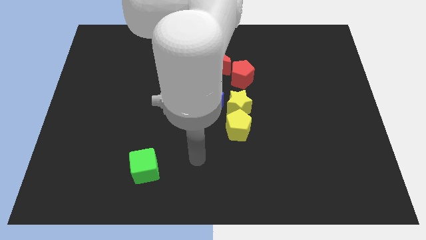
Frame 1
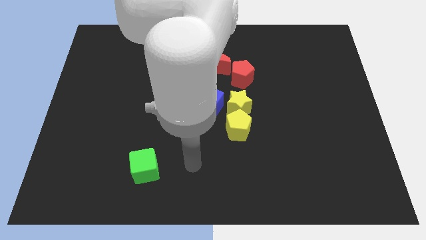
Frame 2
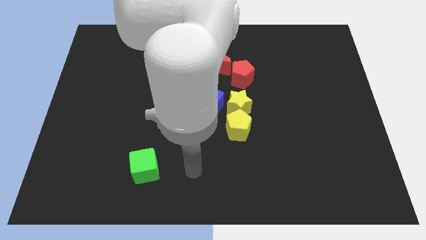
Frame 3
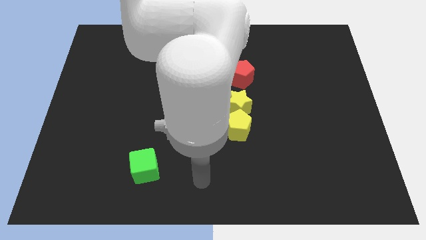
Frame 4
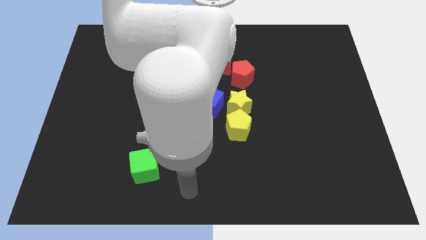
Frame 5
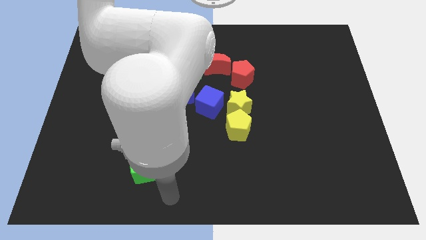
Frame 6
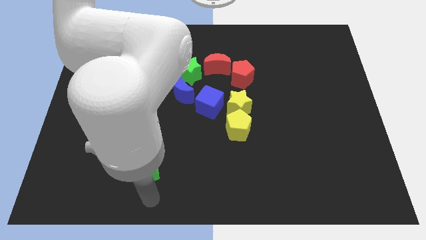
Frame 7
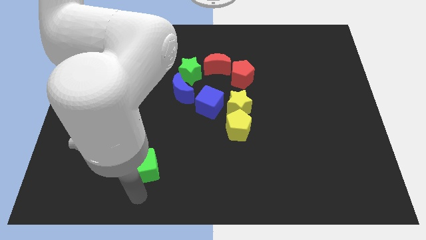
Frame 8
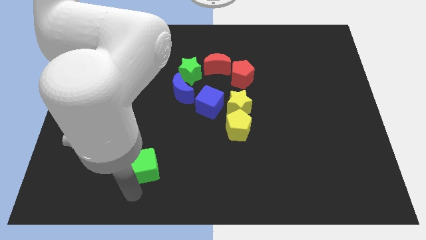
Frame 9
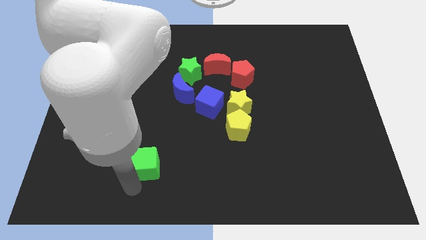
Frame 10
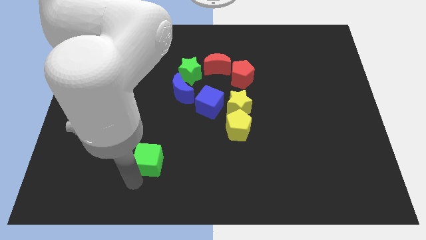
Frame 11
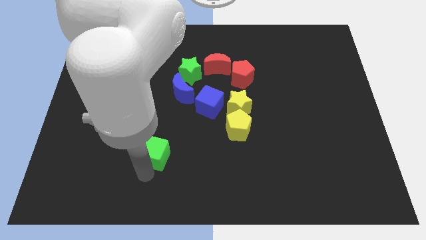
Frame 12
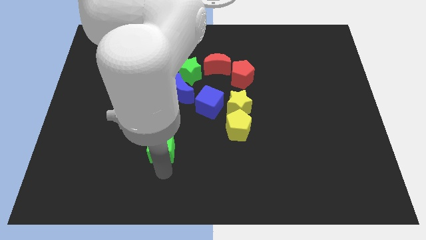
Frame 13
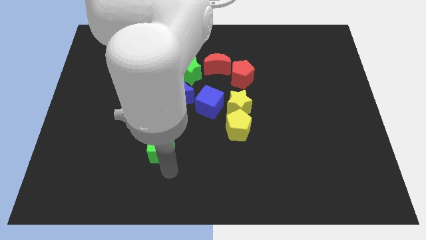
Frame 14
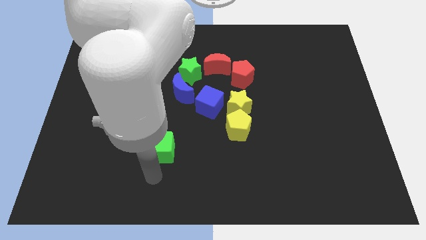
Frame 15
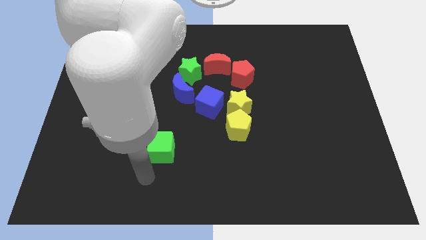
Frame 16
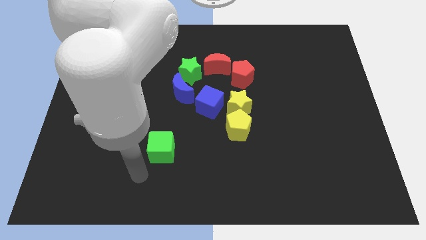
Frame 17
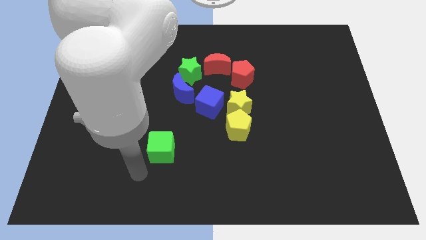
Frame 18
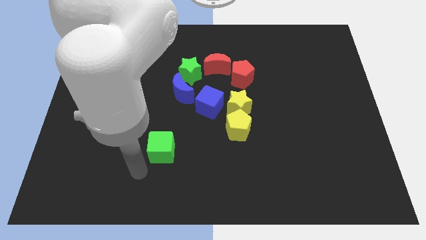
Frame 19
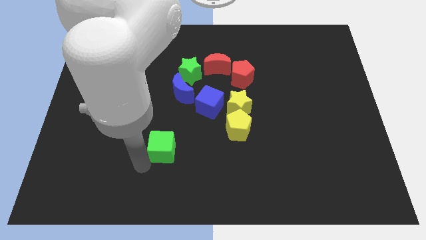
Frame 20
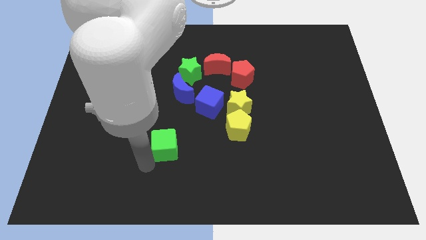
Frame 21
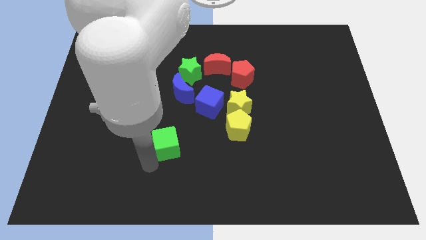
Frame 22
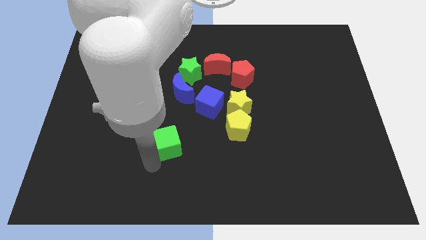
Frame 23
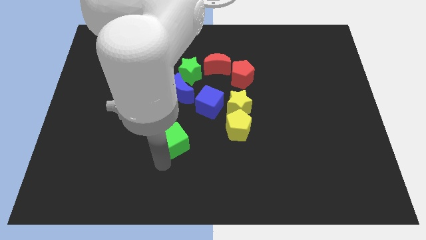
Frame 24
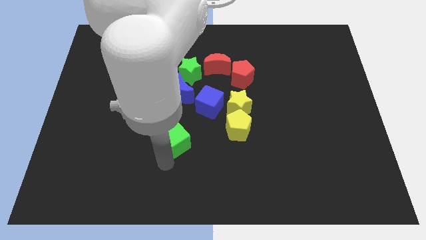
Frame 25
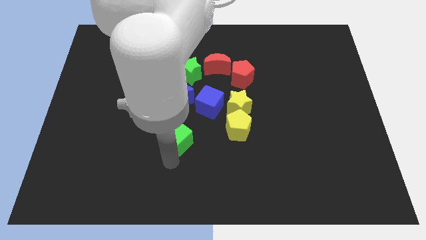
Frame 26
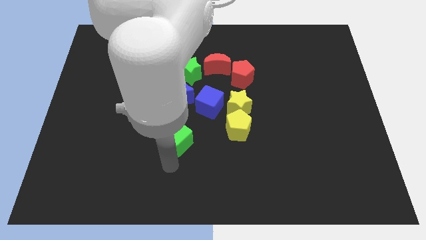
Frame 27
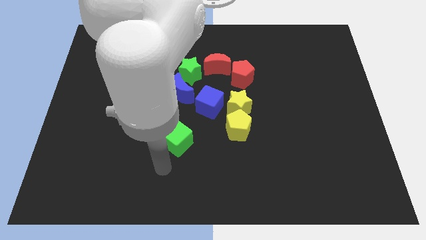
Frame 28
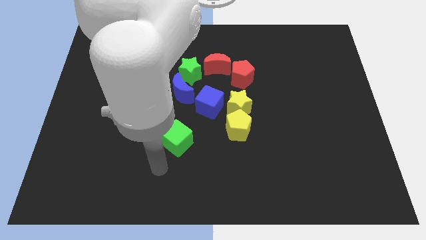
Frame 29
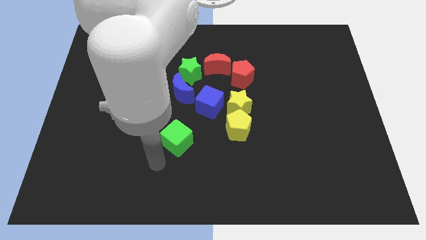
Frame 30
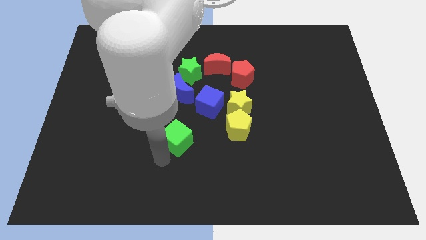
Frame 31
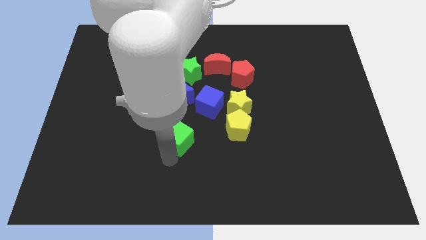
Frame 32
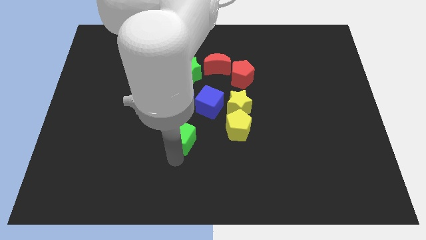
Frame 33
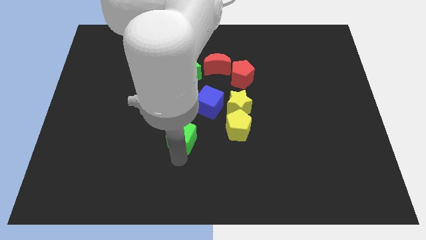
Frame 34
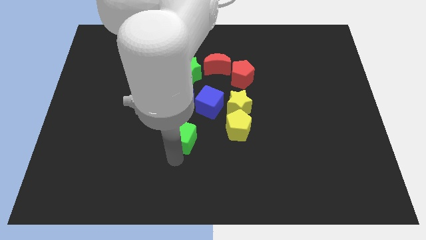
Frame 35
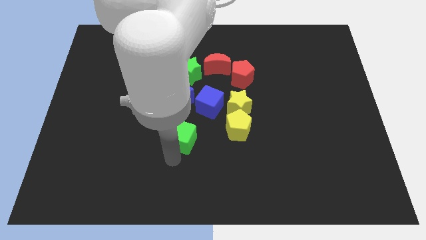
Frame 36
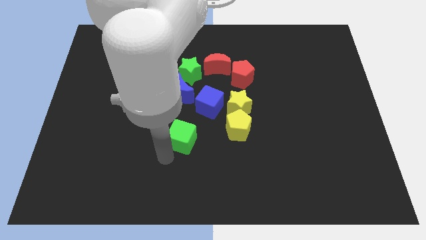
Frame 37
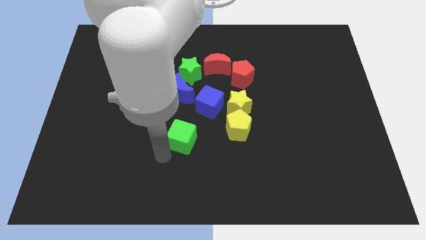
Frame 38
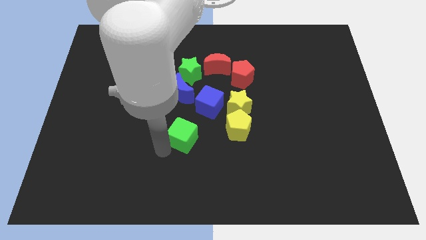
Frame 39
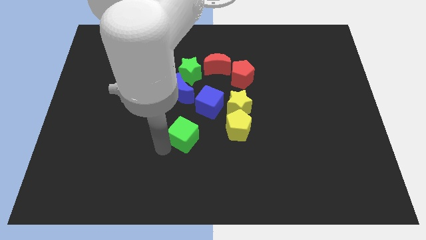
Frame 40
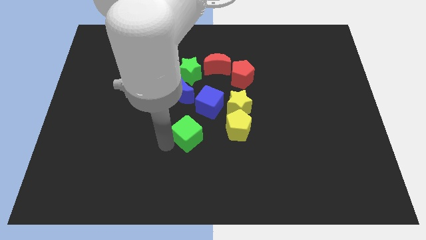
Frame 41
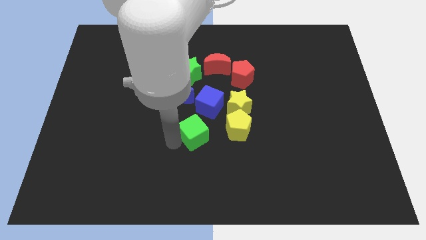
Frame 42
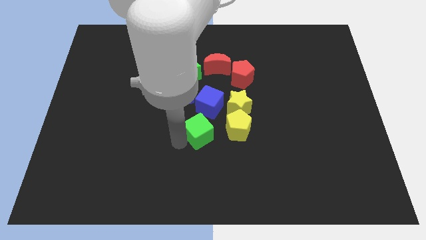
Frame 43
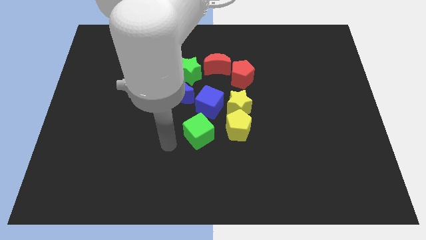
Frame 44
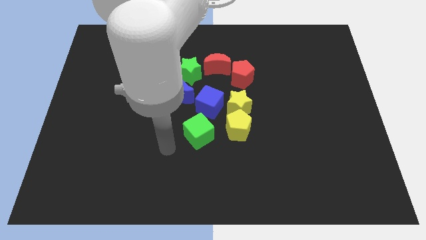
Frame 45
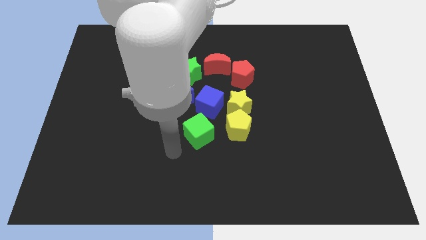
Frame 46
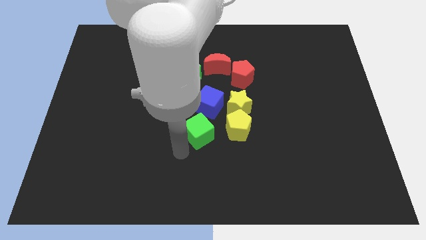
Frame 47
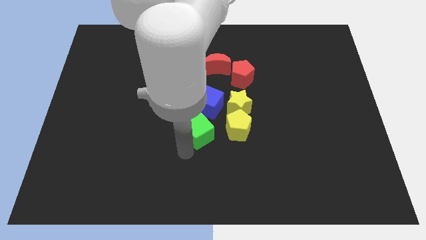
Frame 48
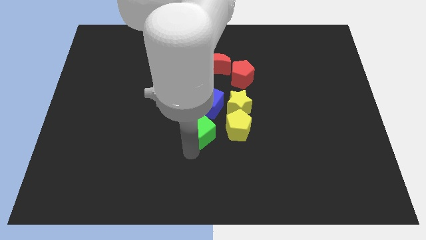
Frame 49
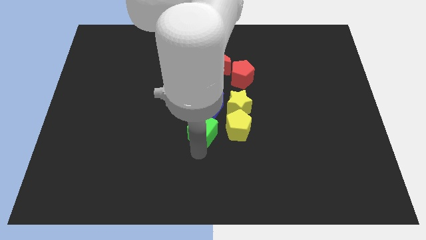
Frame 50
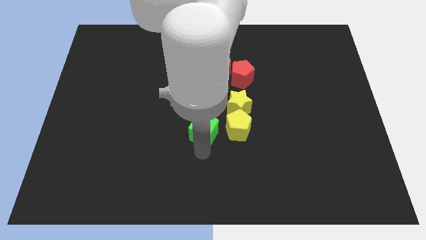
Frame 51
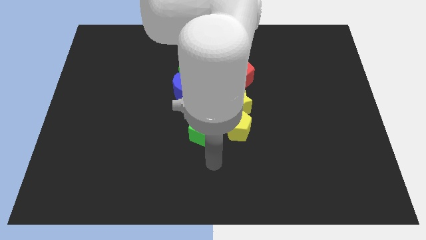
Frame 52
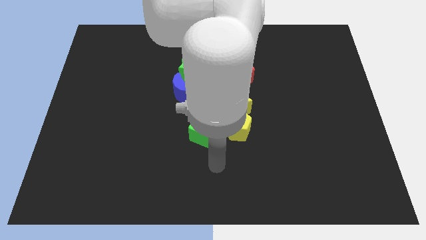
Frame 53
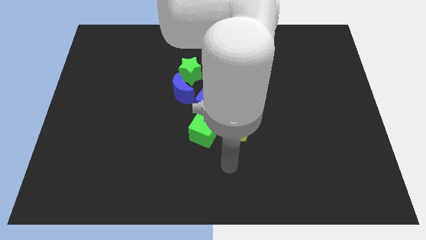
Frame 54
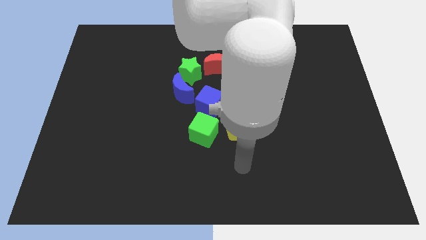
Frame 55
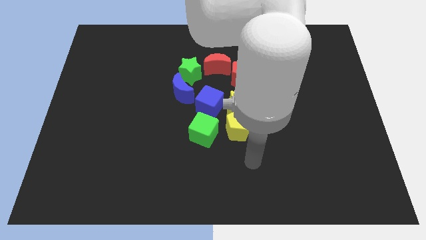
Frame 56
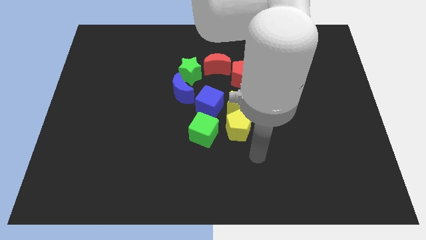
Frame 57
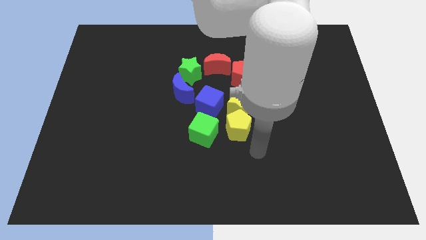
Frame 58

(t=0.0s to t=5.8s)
push the green cube below the blue cube

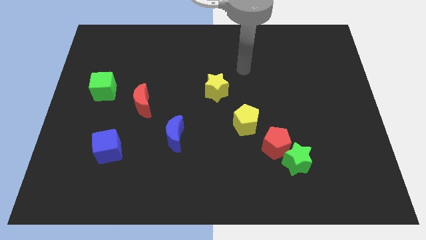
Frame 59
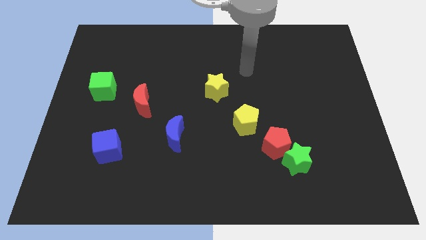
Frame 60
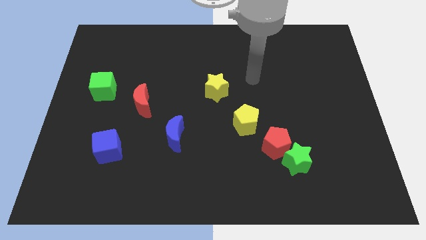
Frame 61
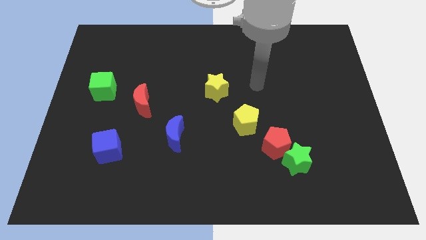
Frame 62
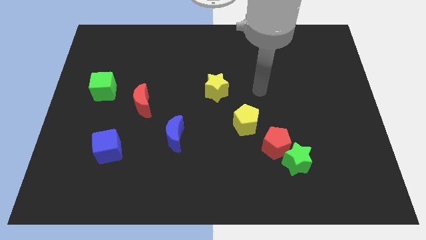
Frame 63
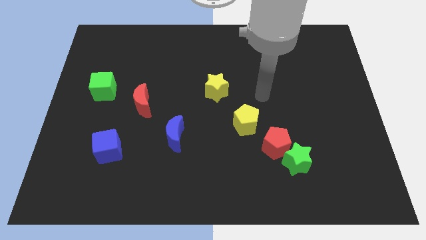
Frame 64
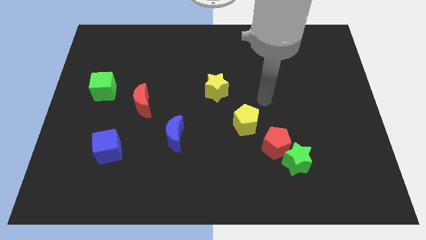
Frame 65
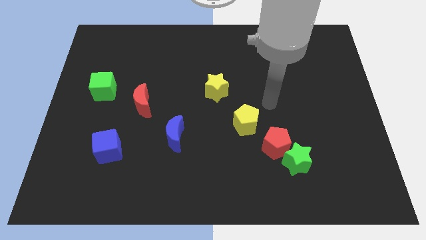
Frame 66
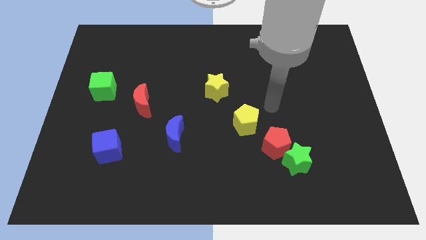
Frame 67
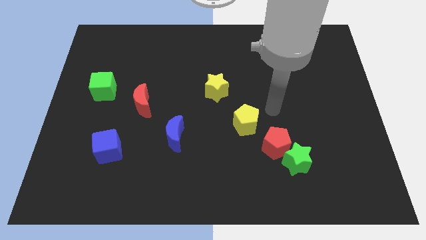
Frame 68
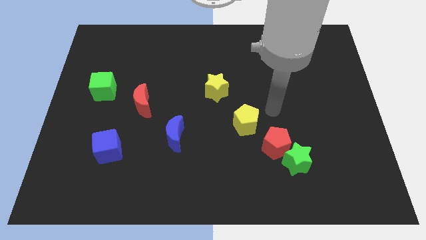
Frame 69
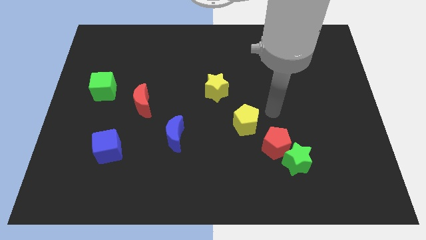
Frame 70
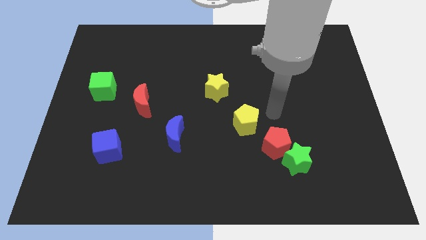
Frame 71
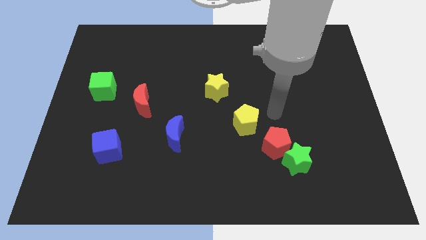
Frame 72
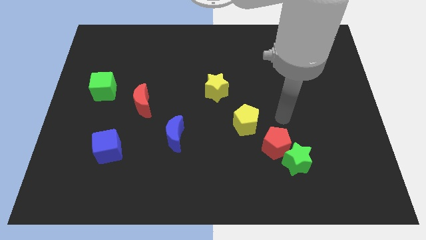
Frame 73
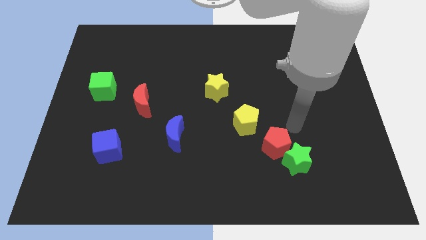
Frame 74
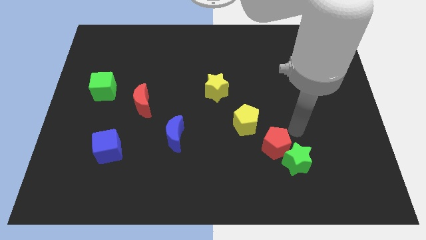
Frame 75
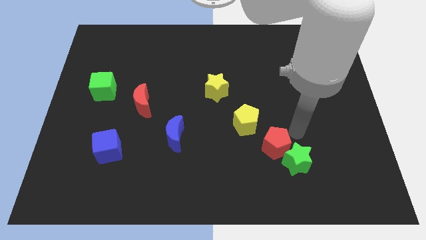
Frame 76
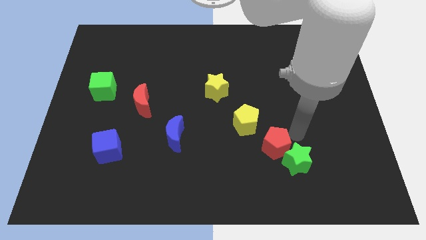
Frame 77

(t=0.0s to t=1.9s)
point your arm towards red pentagon

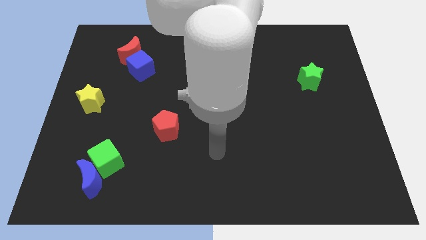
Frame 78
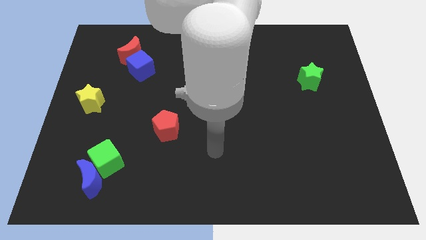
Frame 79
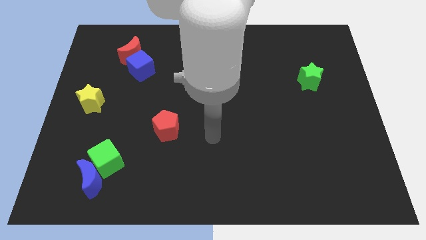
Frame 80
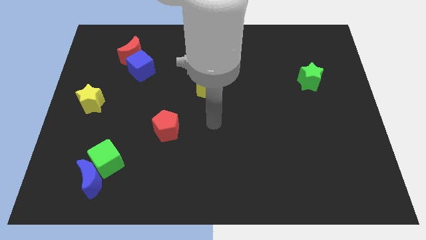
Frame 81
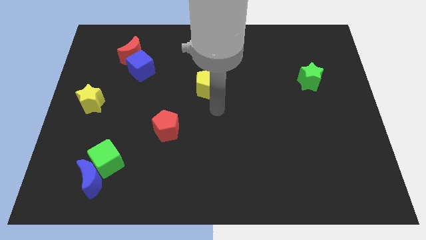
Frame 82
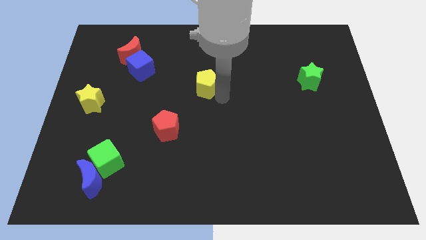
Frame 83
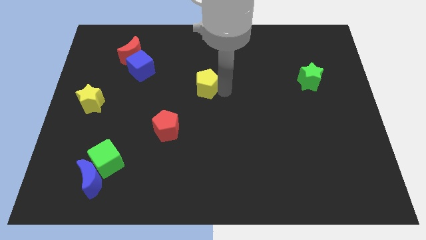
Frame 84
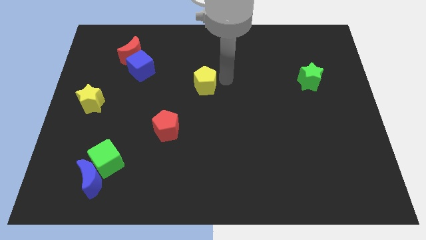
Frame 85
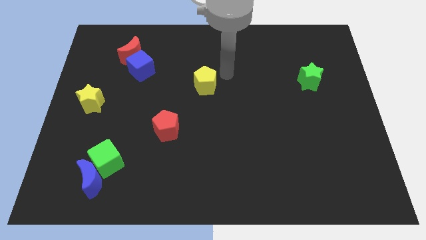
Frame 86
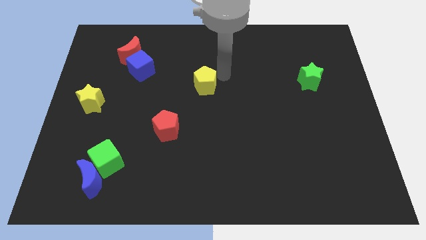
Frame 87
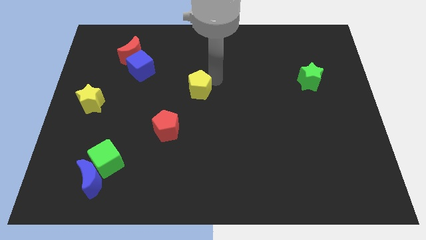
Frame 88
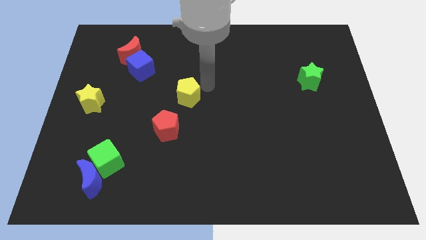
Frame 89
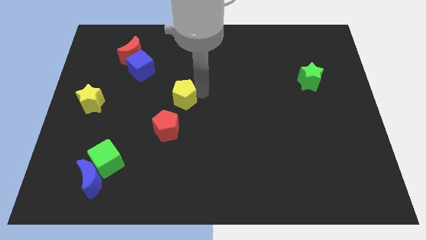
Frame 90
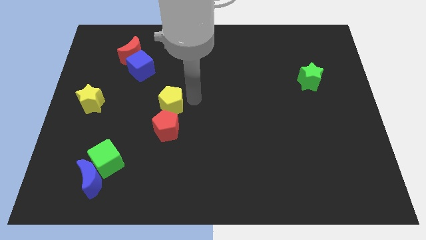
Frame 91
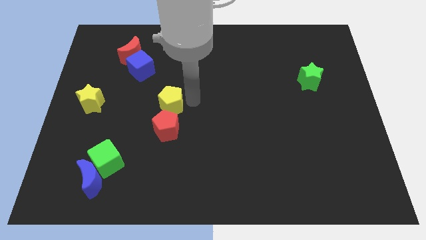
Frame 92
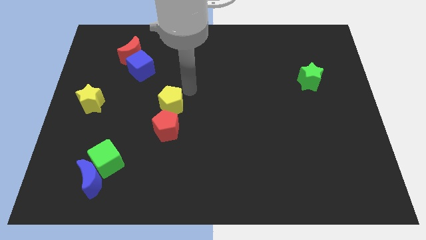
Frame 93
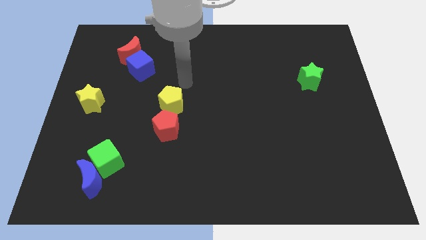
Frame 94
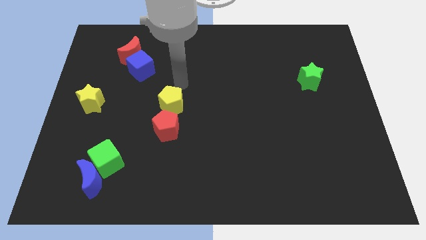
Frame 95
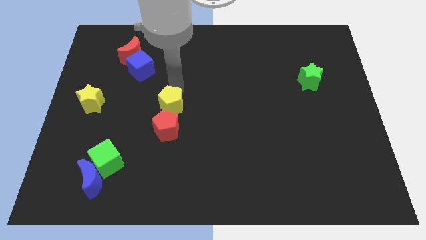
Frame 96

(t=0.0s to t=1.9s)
slightly move the yellow pentagon towards the left center of the board
